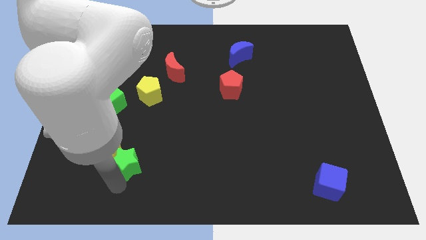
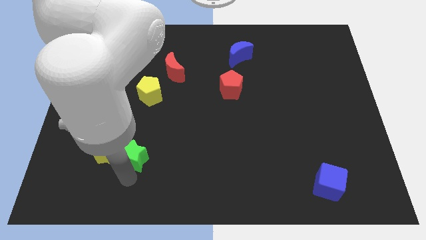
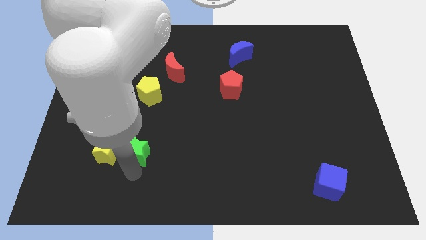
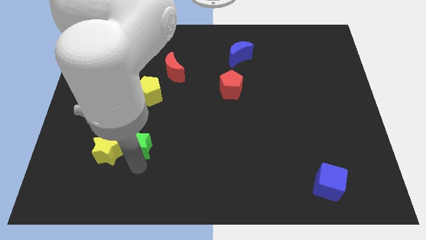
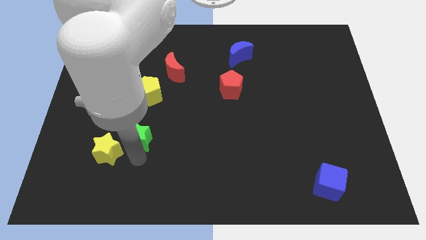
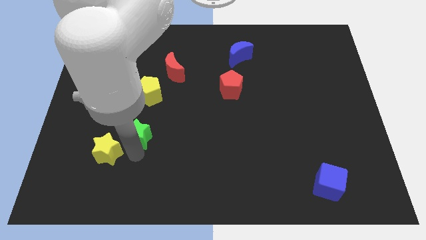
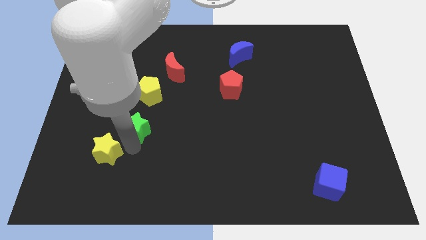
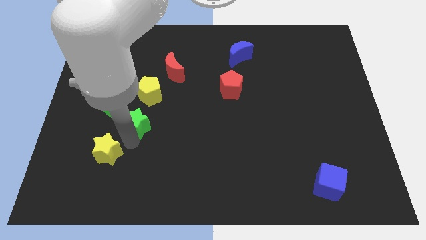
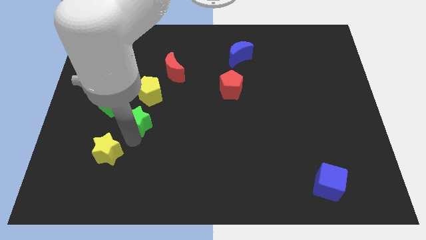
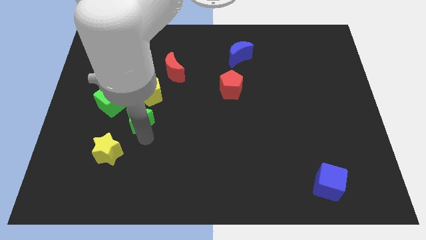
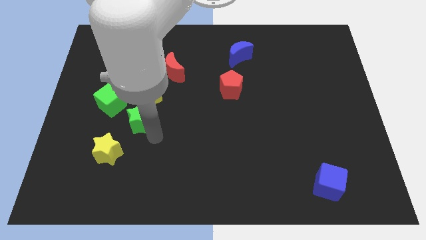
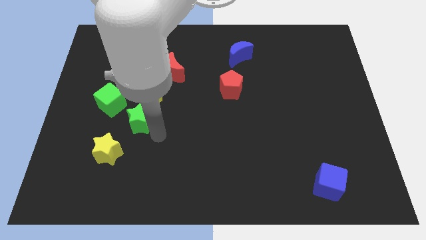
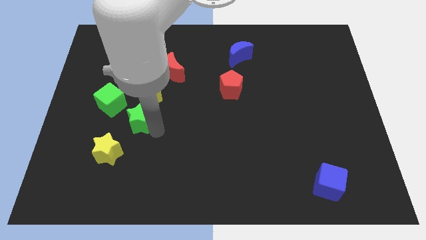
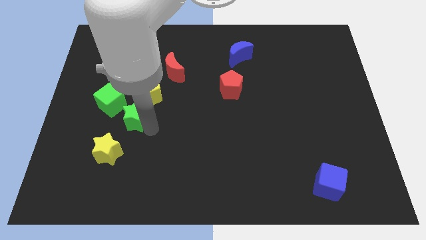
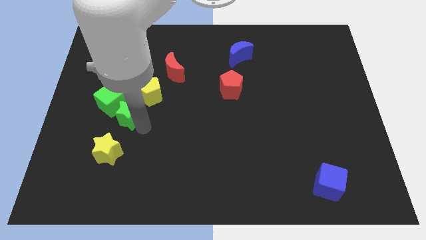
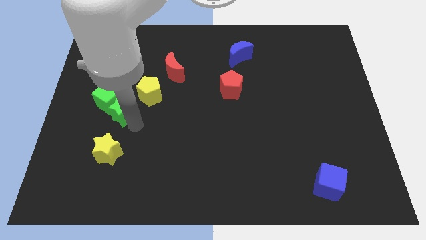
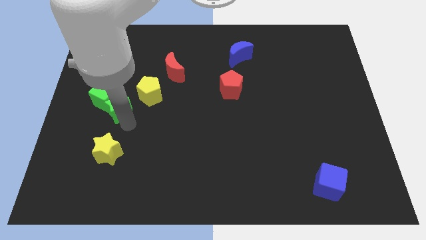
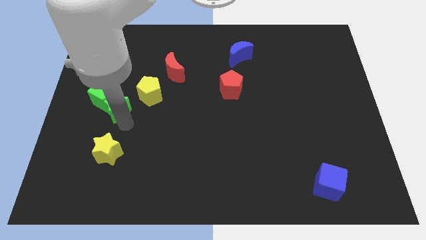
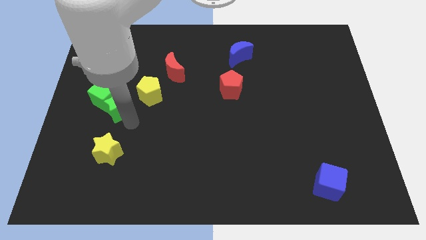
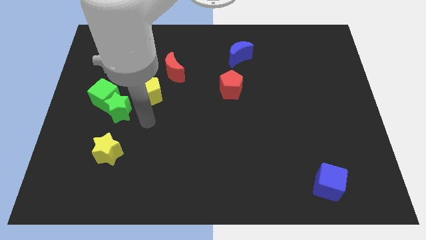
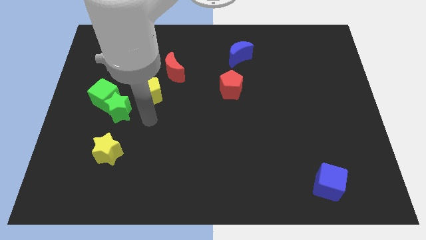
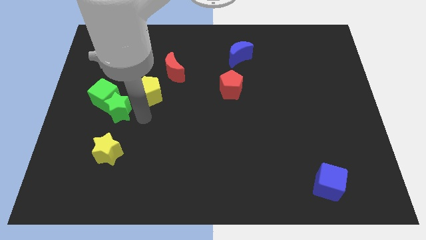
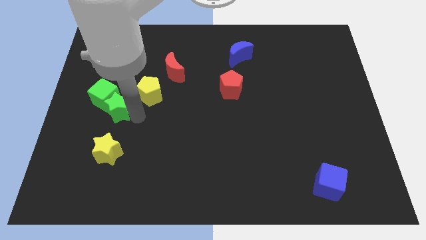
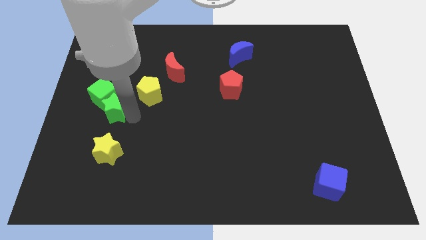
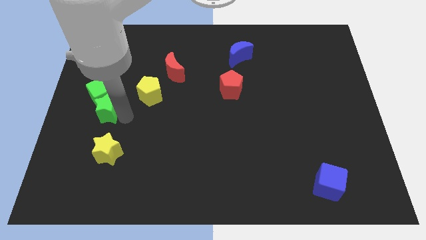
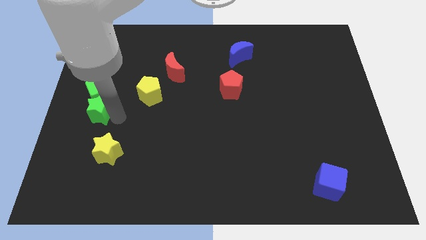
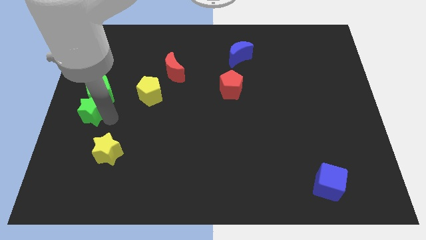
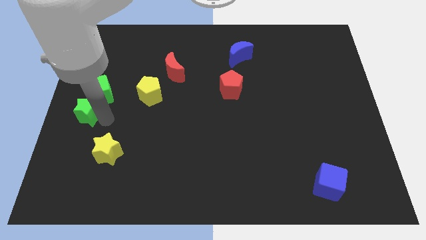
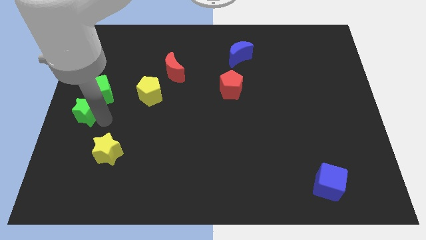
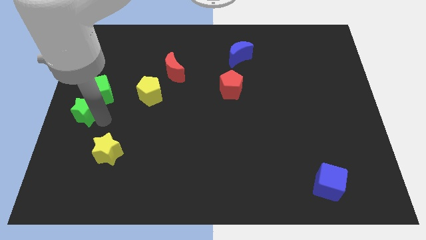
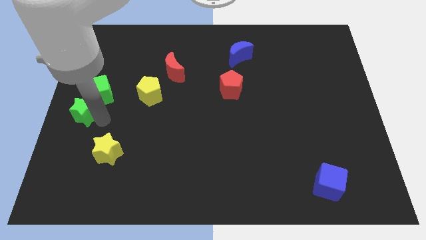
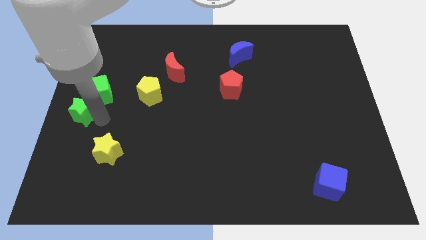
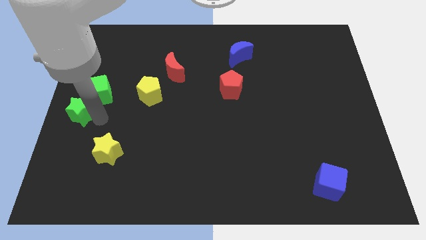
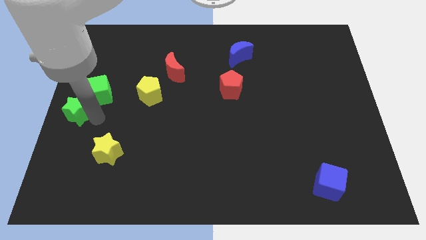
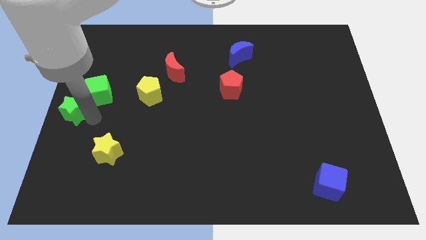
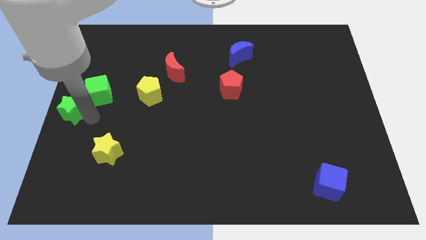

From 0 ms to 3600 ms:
place the green star diagonal to the green cube

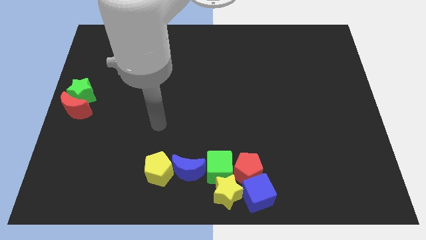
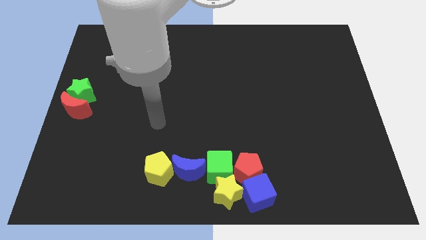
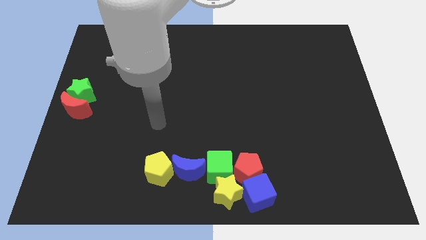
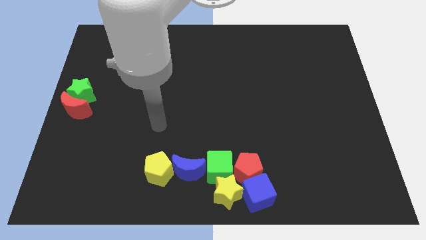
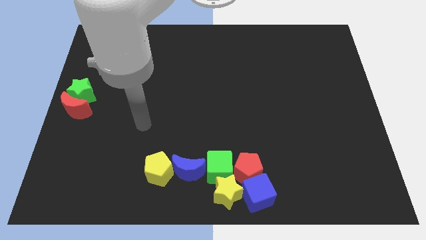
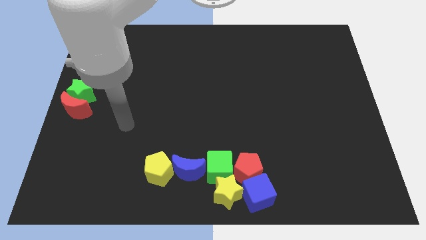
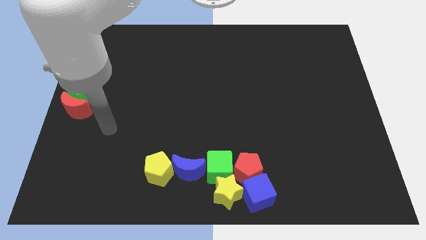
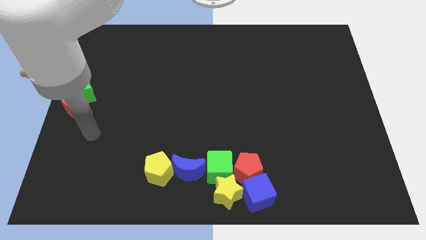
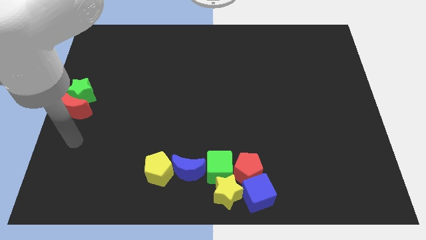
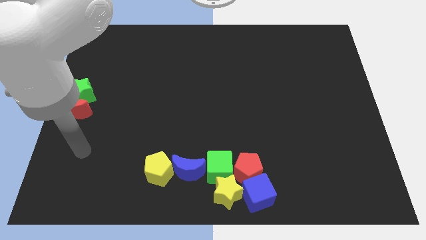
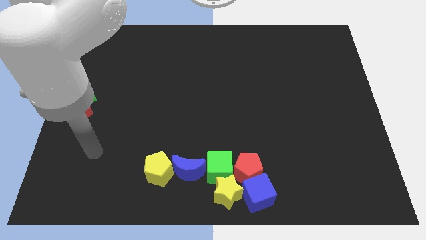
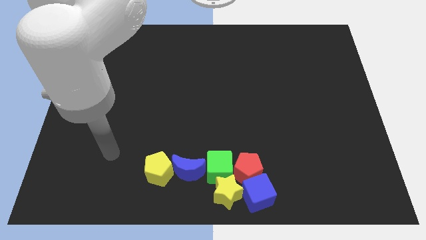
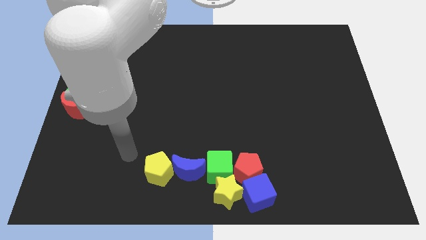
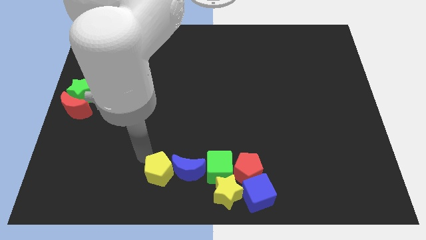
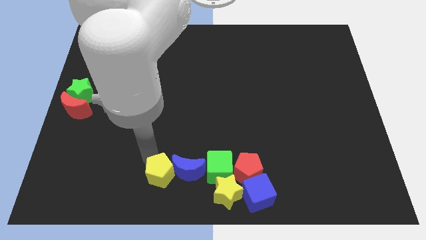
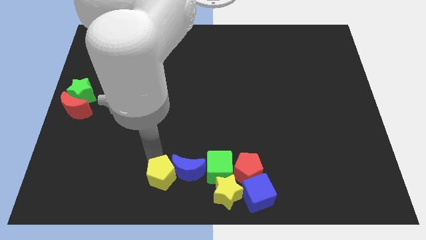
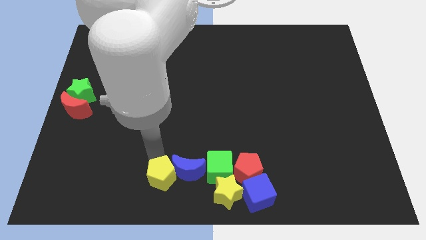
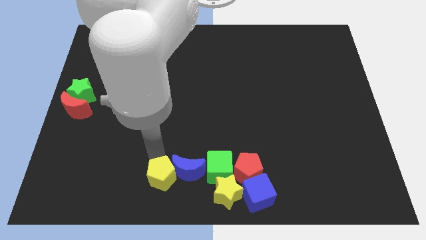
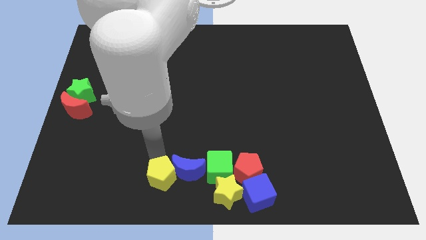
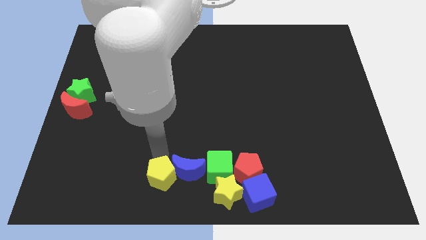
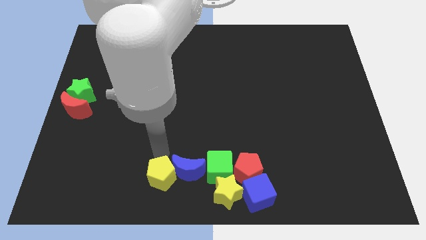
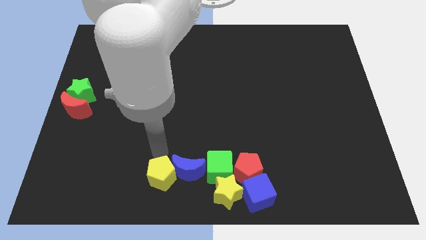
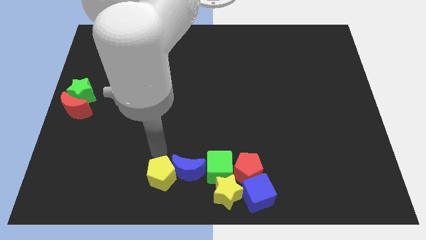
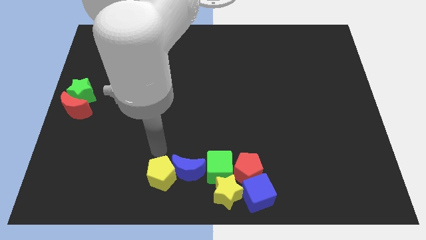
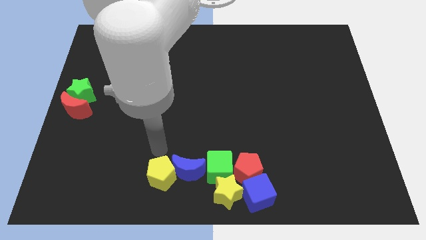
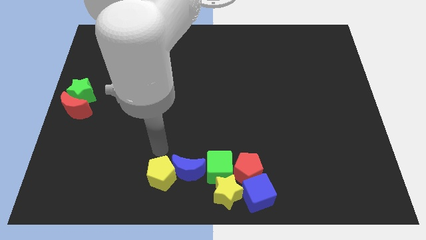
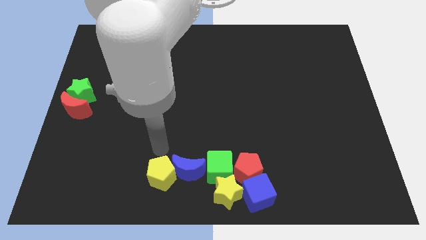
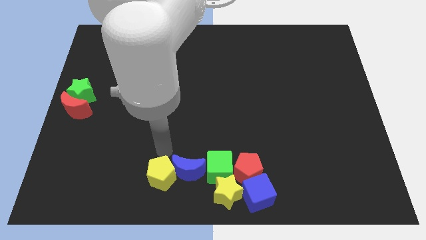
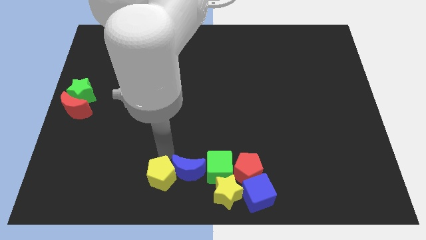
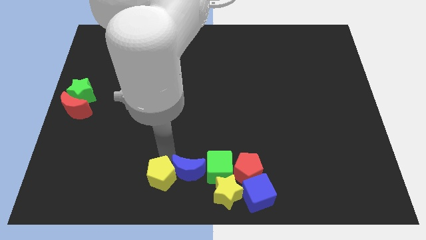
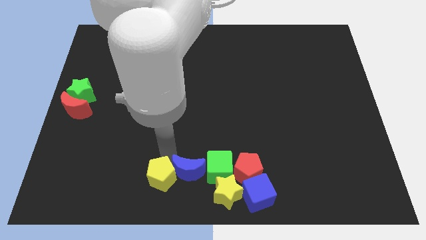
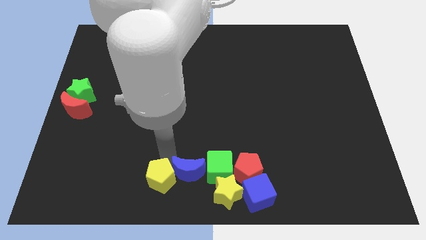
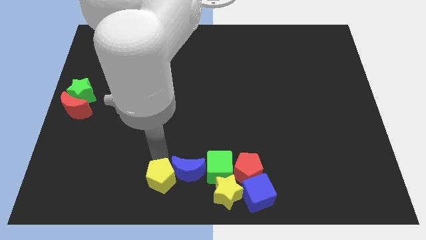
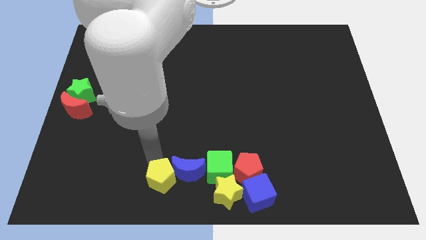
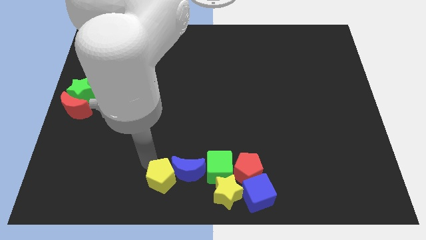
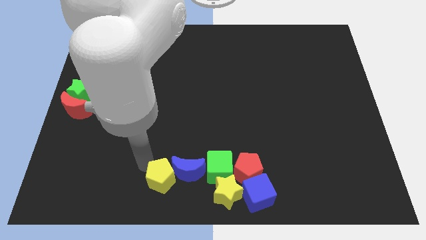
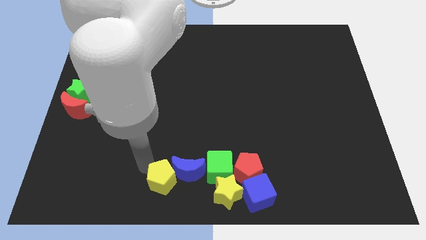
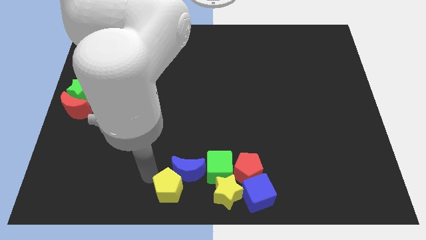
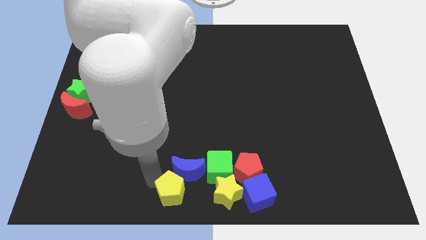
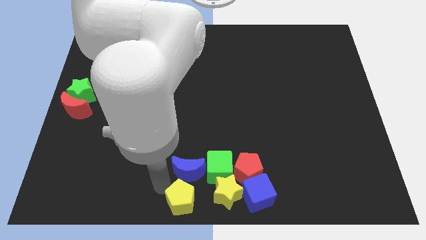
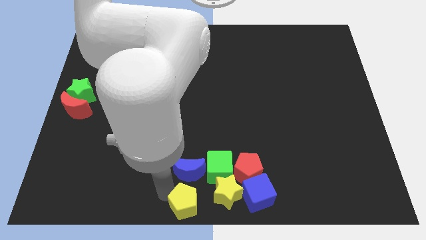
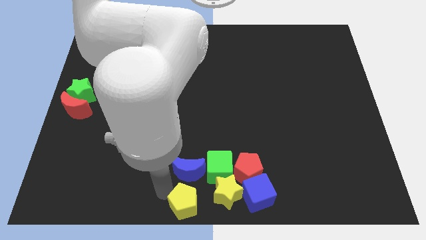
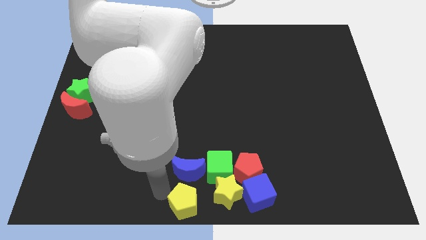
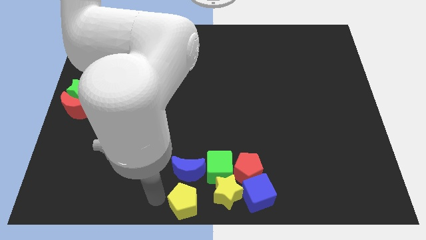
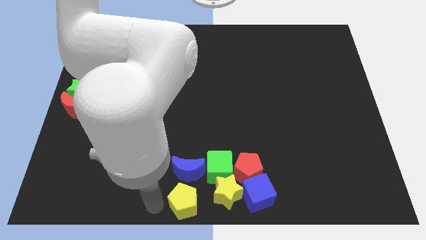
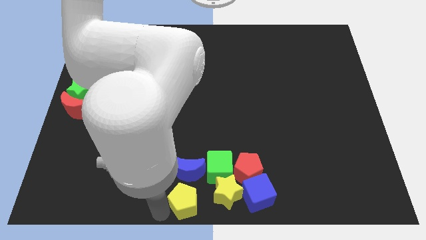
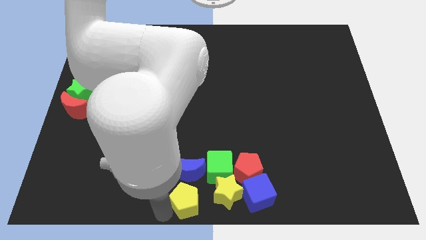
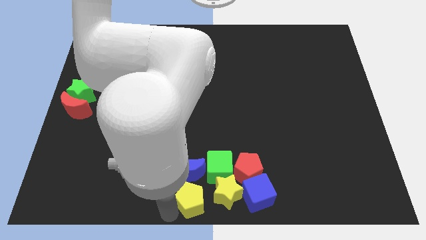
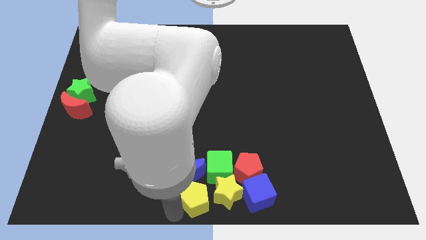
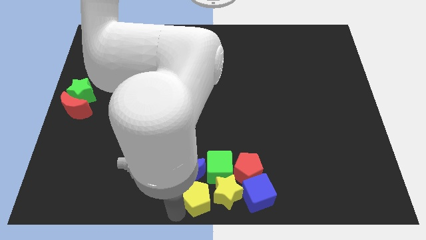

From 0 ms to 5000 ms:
move the yellow pentagon to the left of the yellow star

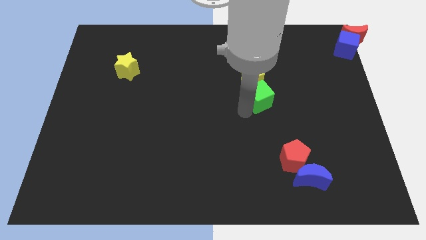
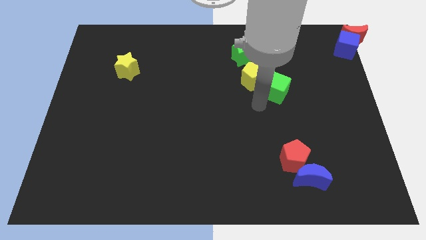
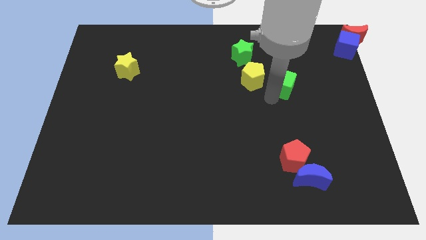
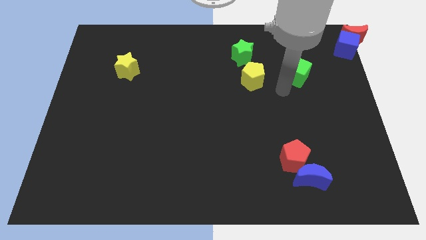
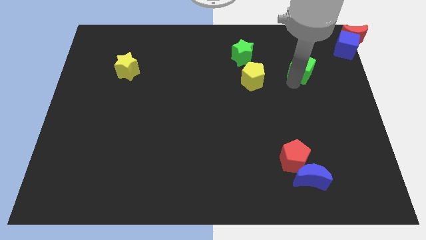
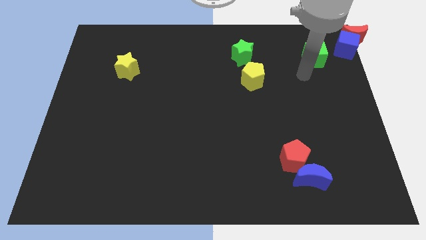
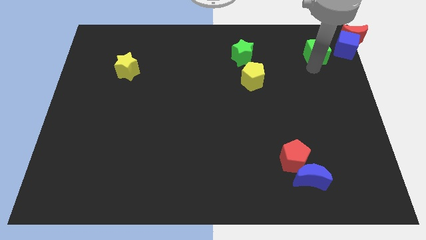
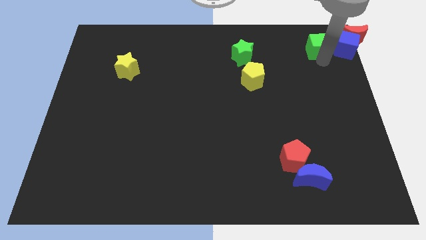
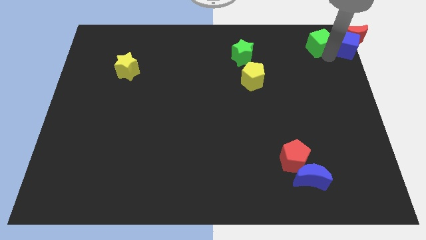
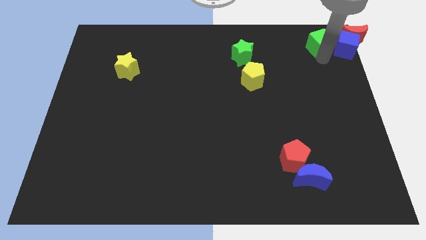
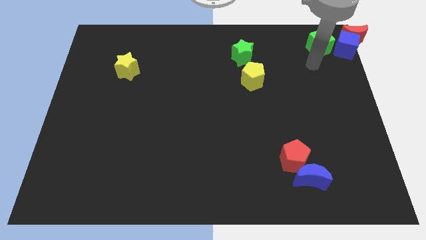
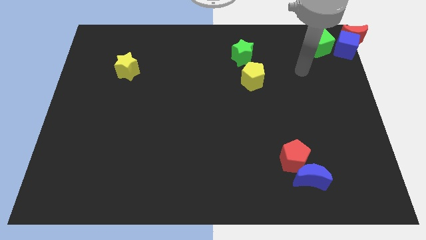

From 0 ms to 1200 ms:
place the green cube right to the green star
